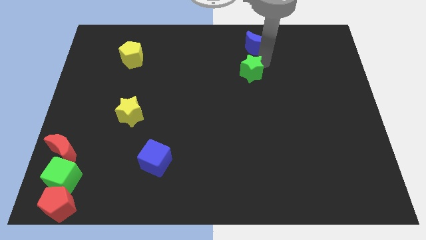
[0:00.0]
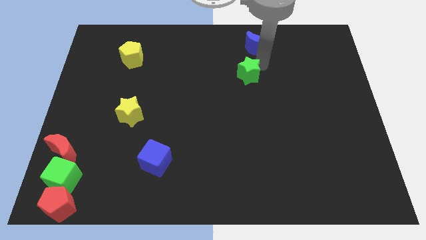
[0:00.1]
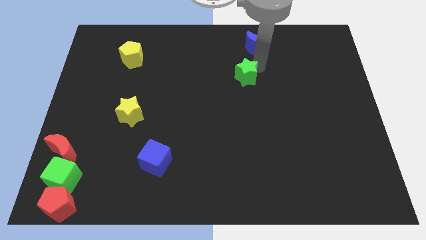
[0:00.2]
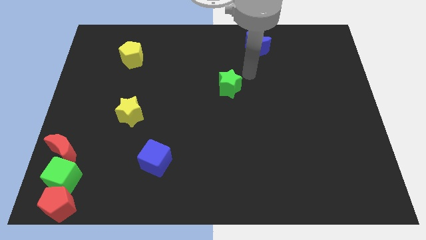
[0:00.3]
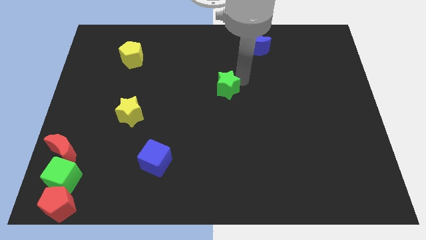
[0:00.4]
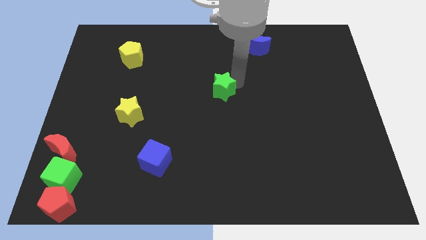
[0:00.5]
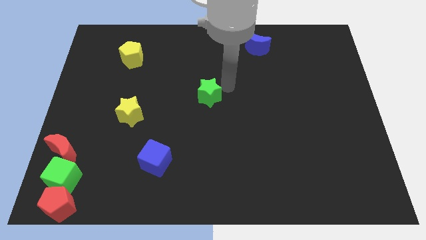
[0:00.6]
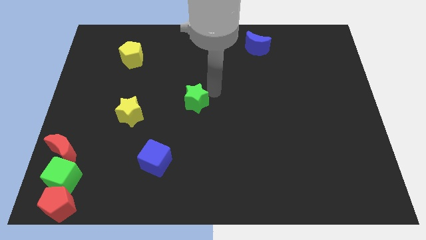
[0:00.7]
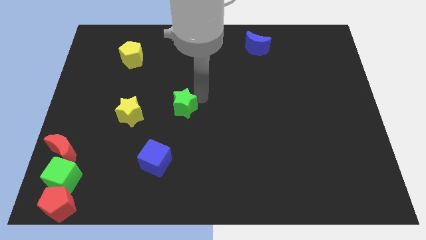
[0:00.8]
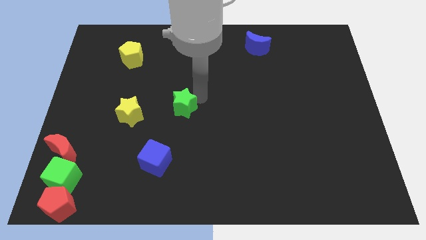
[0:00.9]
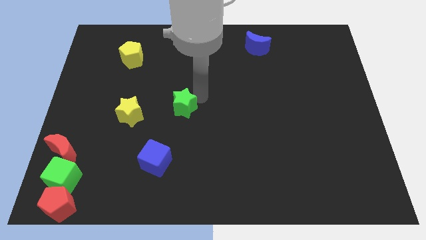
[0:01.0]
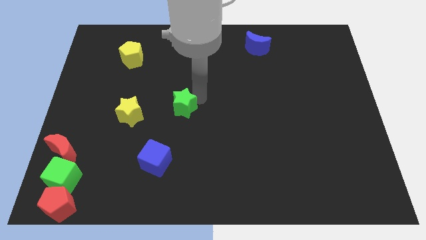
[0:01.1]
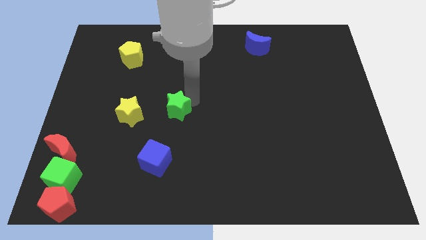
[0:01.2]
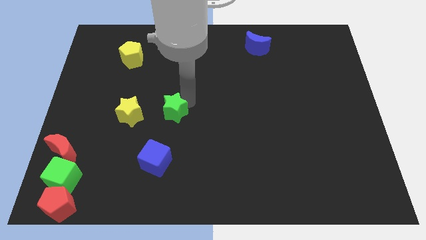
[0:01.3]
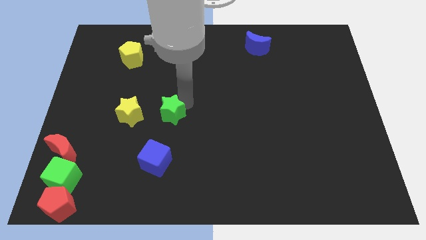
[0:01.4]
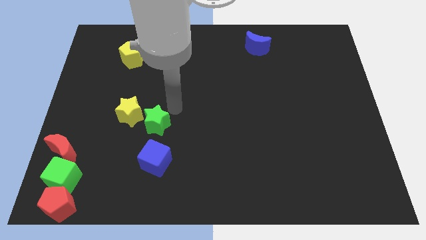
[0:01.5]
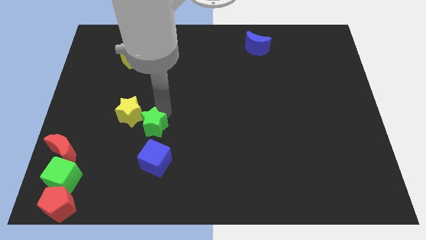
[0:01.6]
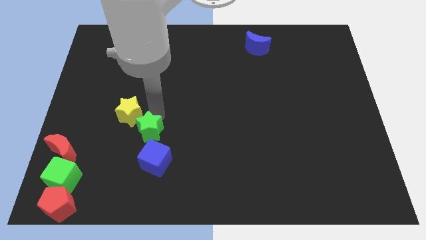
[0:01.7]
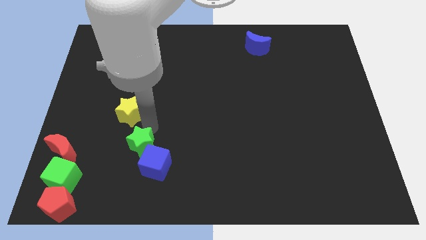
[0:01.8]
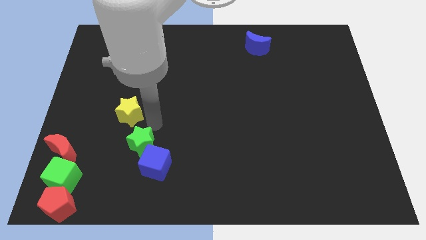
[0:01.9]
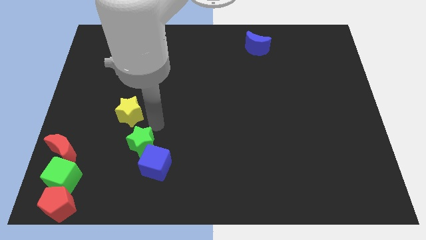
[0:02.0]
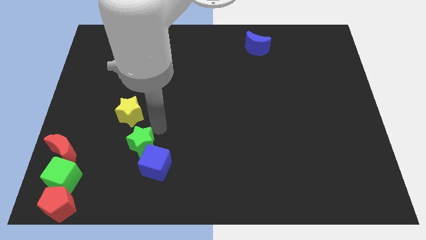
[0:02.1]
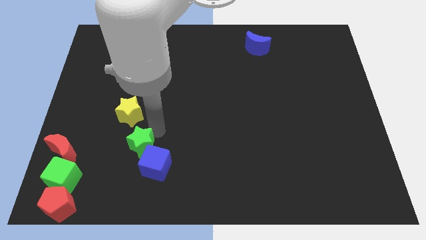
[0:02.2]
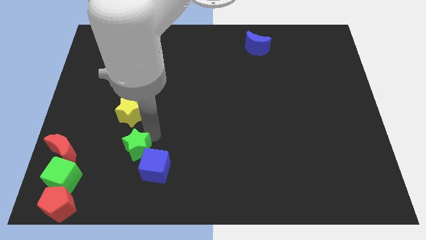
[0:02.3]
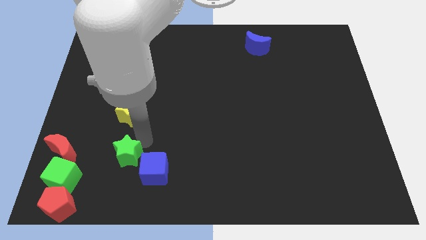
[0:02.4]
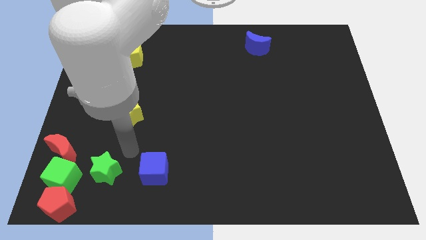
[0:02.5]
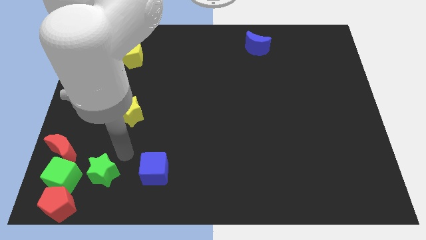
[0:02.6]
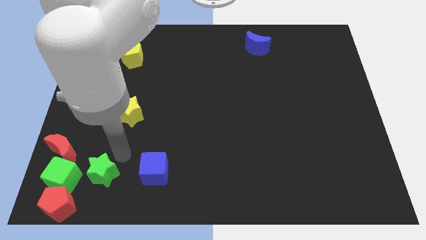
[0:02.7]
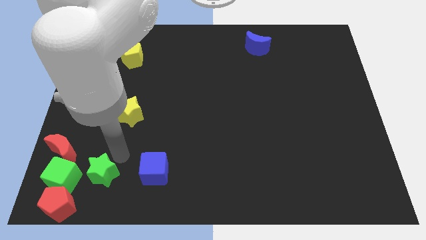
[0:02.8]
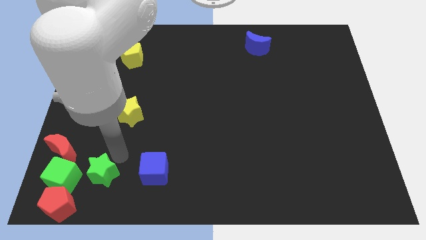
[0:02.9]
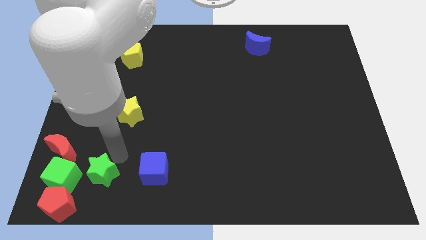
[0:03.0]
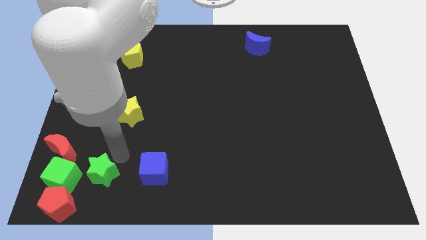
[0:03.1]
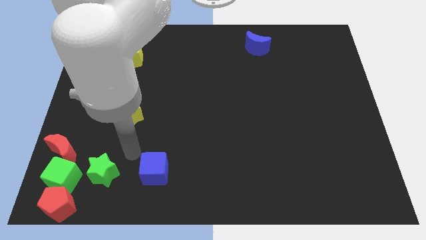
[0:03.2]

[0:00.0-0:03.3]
move green star to the top right side of the green cube

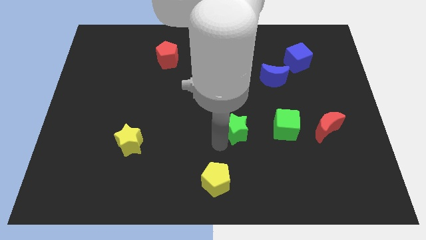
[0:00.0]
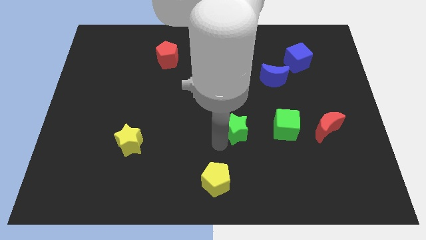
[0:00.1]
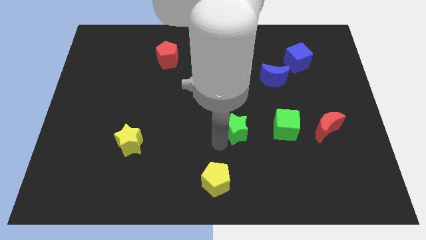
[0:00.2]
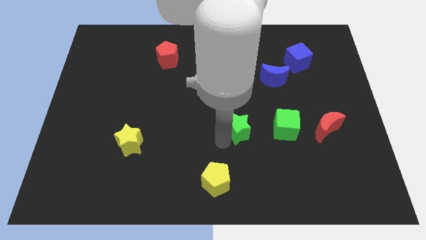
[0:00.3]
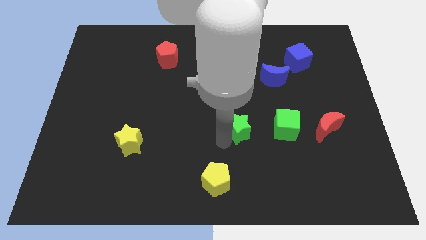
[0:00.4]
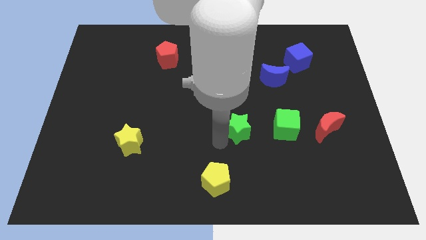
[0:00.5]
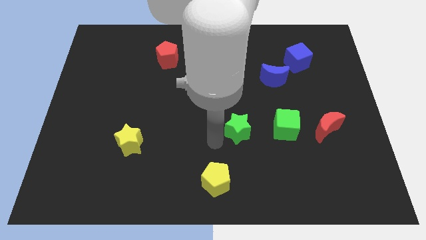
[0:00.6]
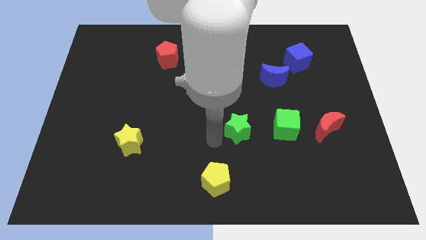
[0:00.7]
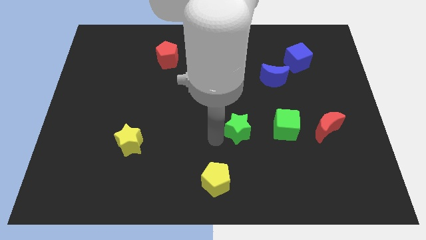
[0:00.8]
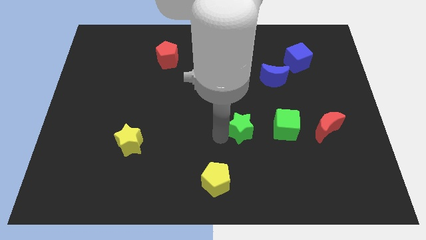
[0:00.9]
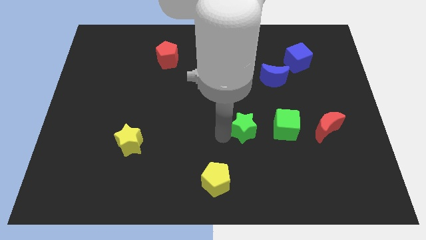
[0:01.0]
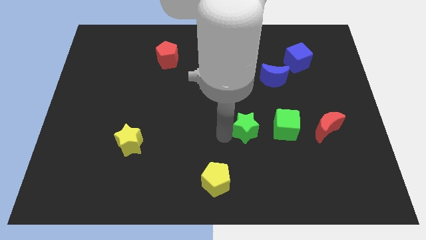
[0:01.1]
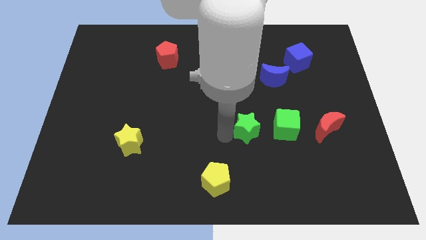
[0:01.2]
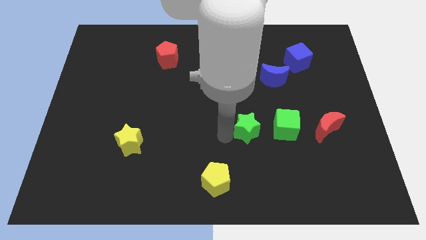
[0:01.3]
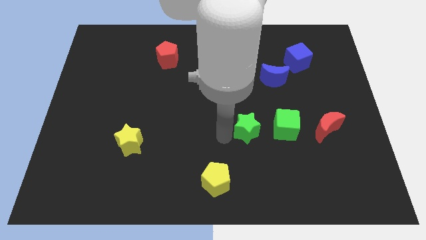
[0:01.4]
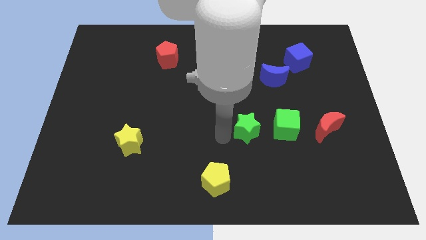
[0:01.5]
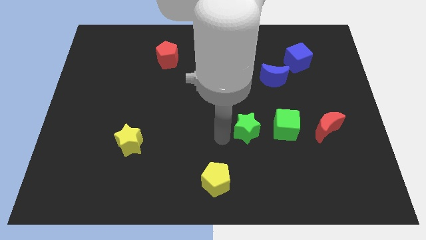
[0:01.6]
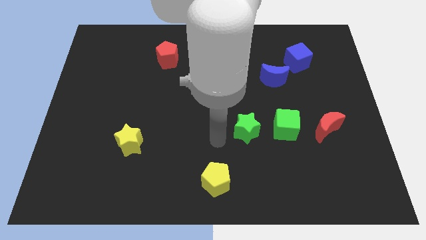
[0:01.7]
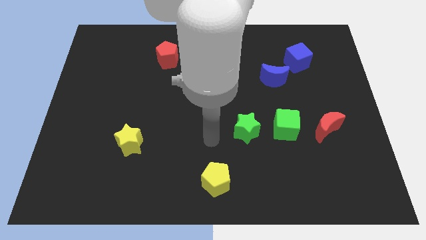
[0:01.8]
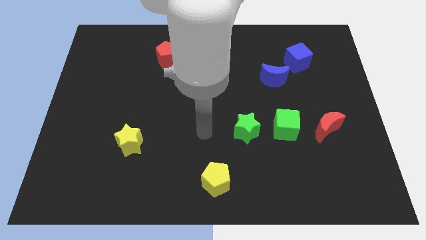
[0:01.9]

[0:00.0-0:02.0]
slightly push the green star towards the left of green cube

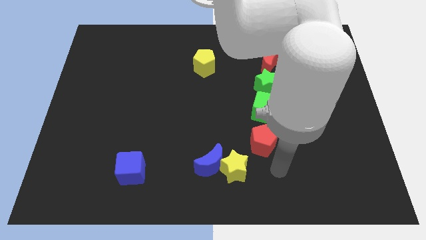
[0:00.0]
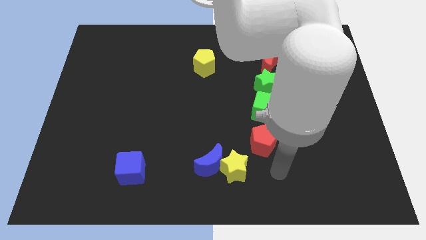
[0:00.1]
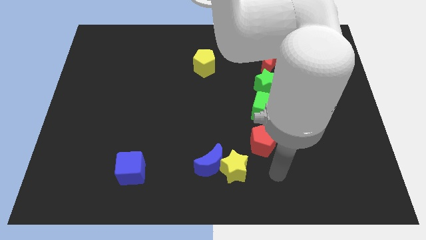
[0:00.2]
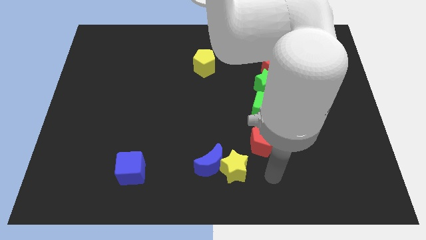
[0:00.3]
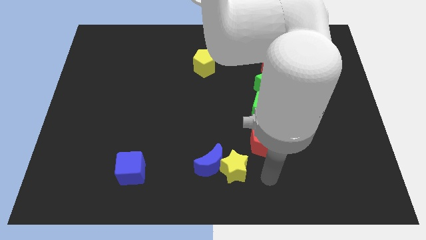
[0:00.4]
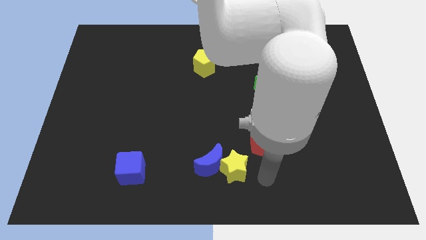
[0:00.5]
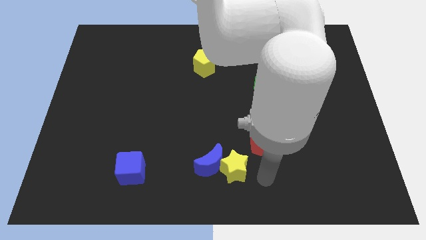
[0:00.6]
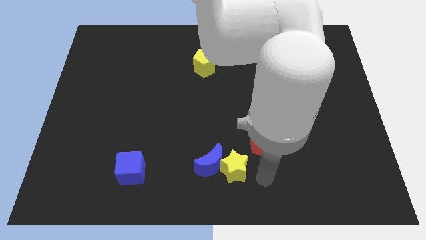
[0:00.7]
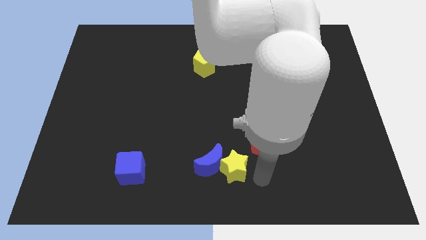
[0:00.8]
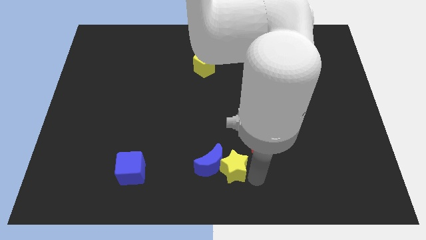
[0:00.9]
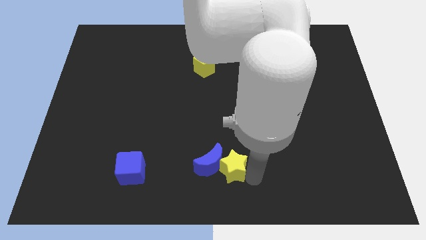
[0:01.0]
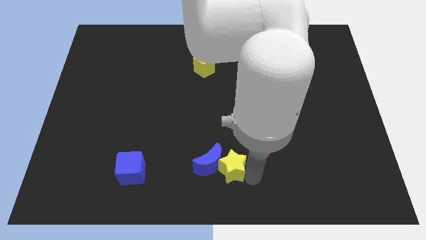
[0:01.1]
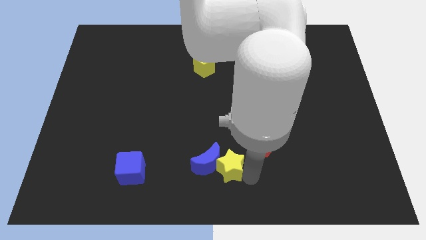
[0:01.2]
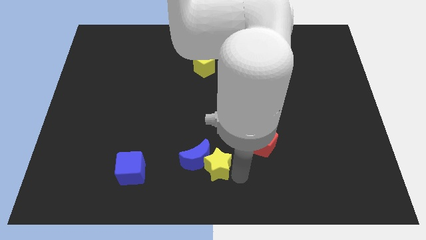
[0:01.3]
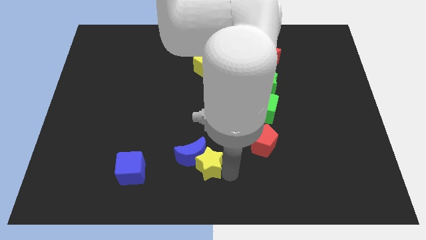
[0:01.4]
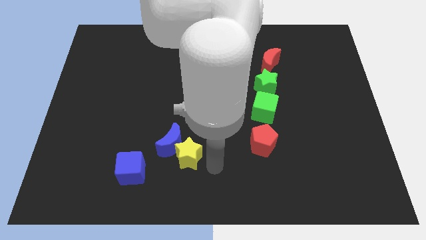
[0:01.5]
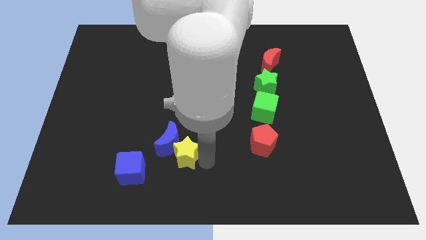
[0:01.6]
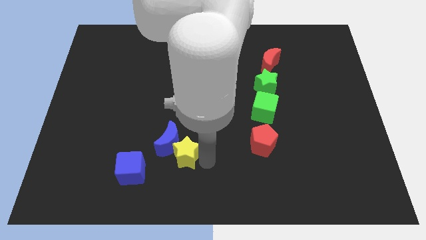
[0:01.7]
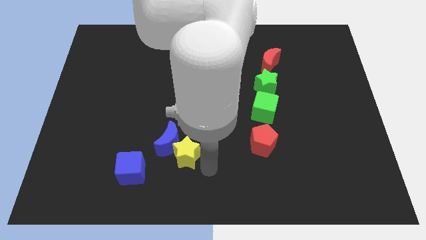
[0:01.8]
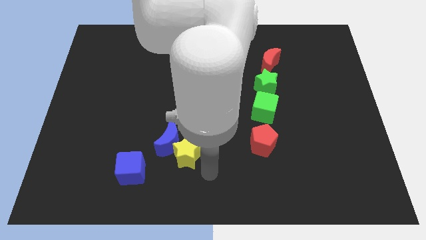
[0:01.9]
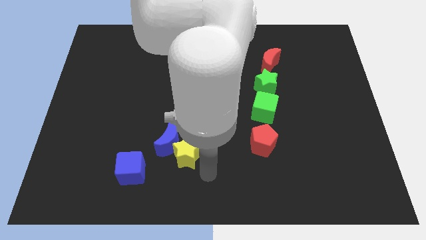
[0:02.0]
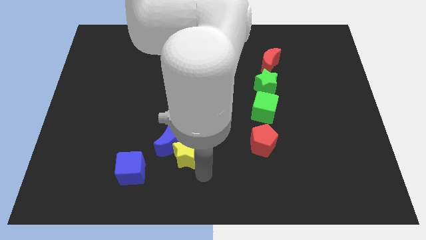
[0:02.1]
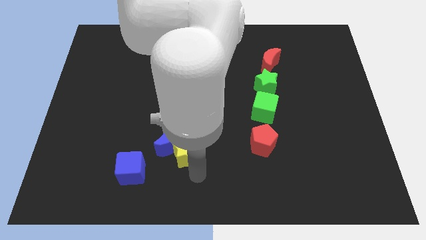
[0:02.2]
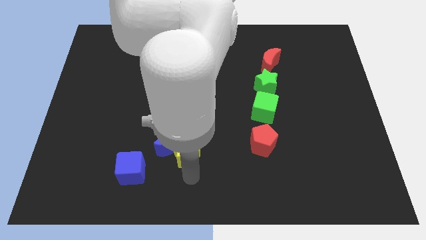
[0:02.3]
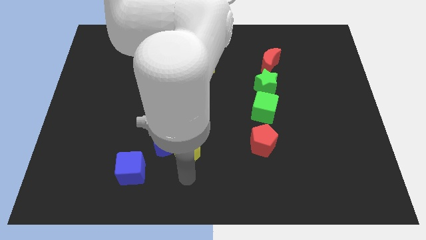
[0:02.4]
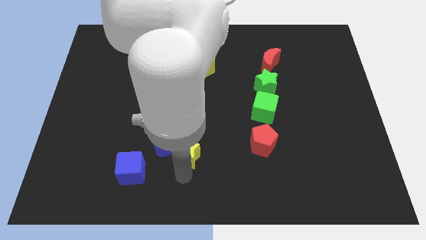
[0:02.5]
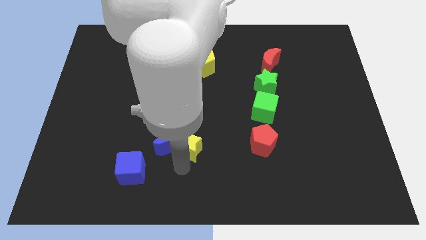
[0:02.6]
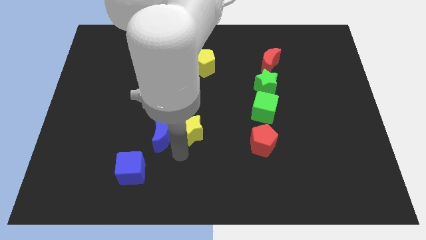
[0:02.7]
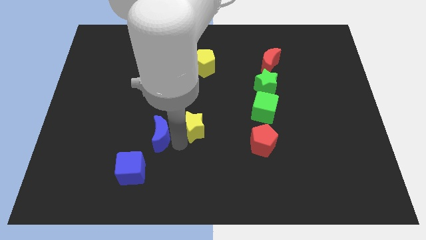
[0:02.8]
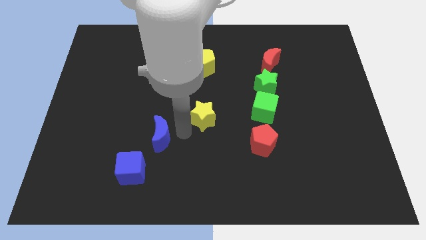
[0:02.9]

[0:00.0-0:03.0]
push the yellow star into the blue moon

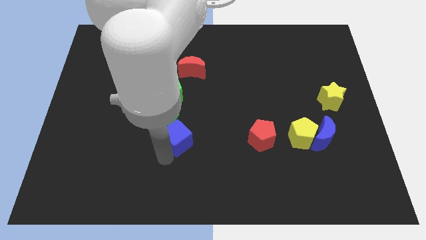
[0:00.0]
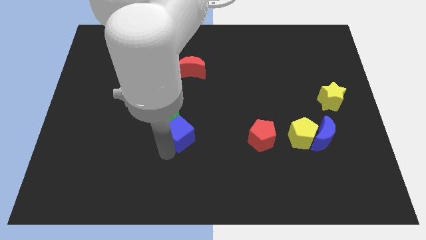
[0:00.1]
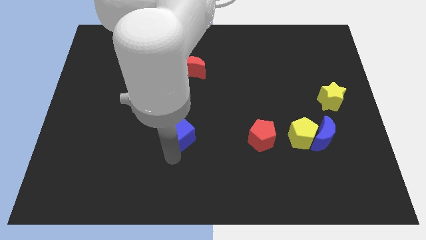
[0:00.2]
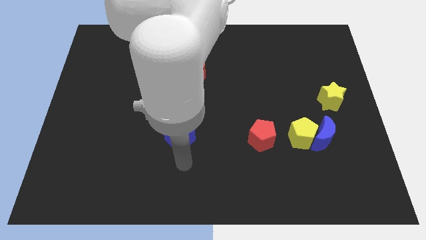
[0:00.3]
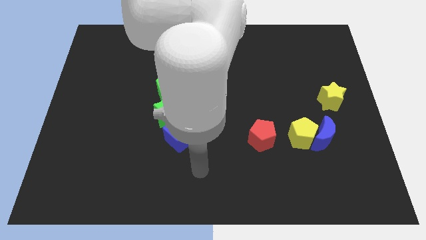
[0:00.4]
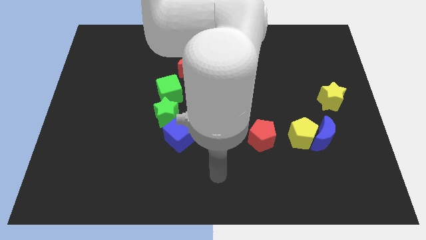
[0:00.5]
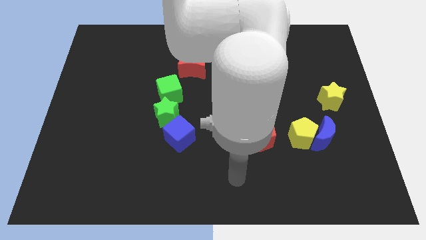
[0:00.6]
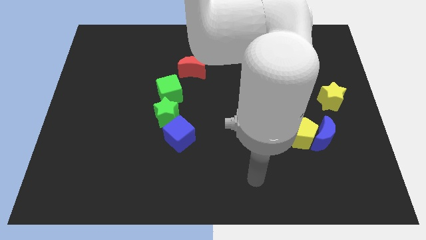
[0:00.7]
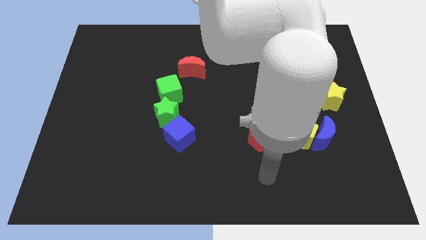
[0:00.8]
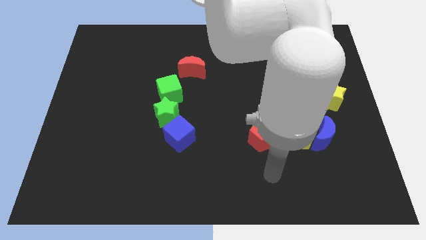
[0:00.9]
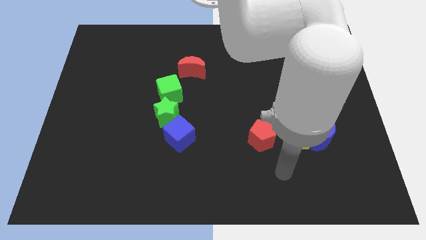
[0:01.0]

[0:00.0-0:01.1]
push the blue cube into the green star from the bottom
